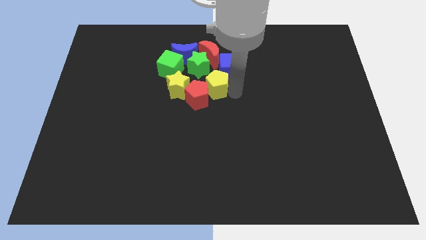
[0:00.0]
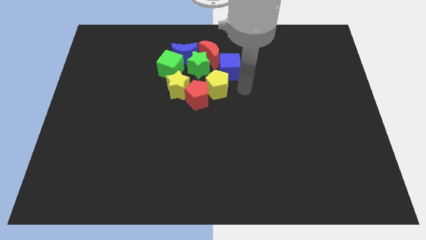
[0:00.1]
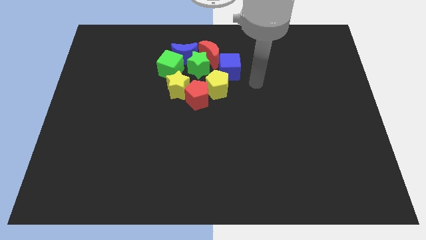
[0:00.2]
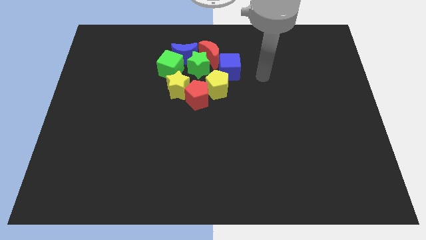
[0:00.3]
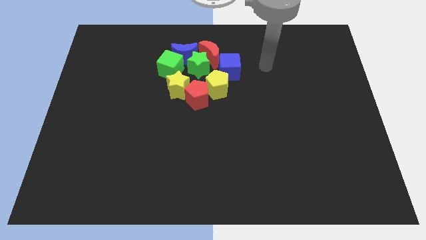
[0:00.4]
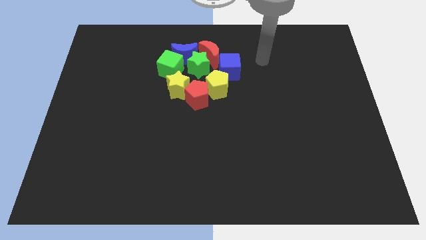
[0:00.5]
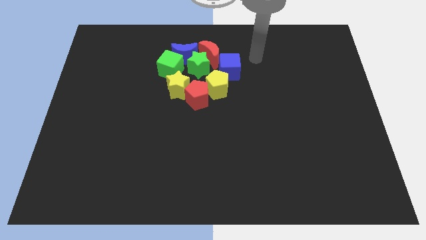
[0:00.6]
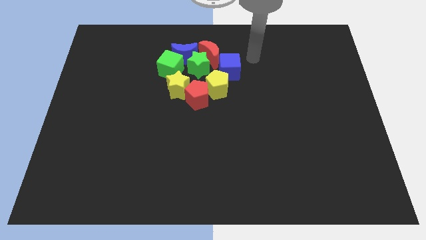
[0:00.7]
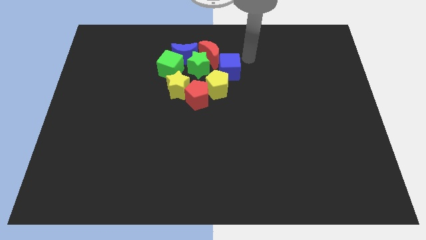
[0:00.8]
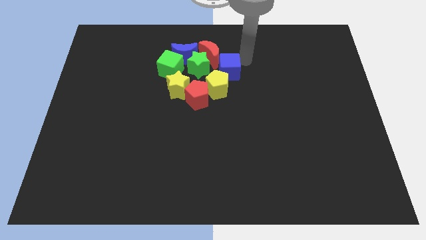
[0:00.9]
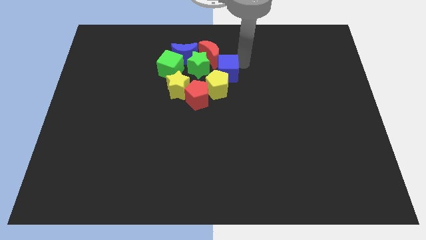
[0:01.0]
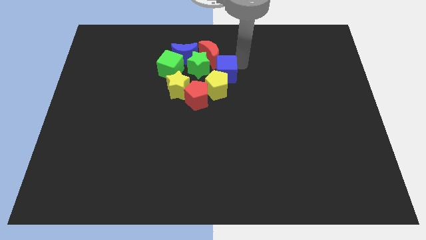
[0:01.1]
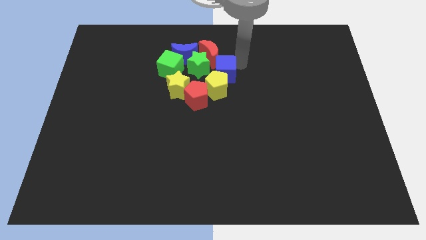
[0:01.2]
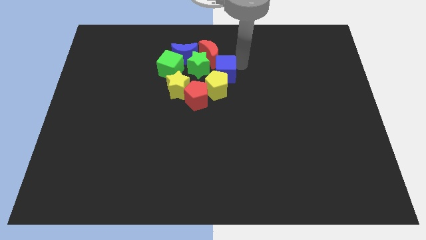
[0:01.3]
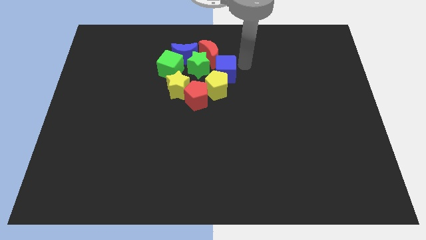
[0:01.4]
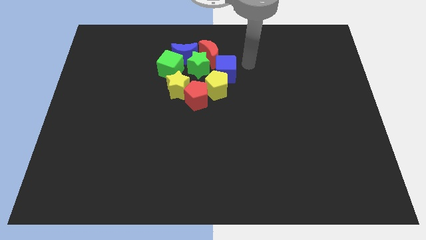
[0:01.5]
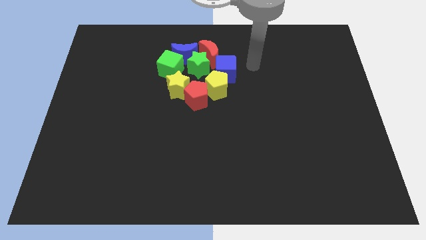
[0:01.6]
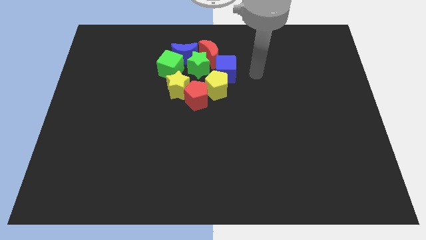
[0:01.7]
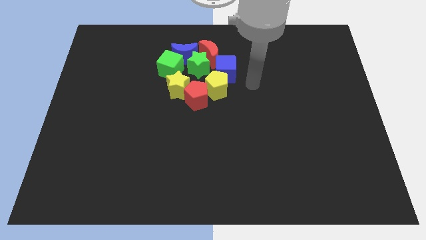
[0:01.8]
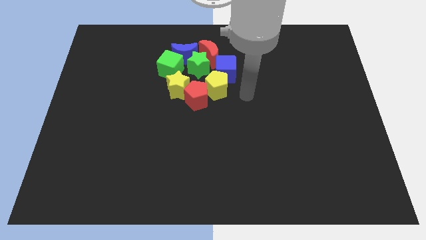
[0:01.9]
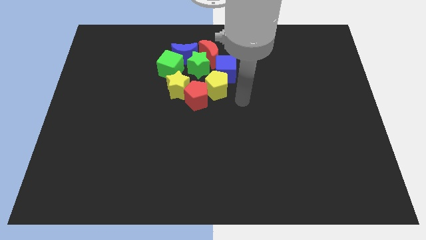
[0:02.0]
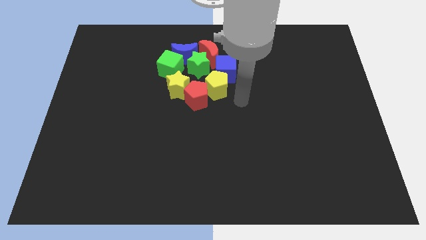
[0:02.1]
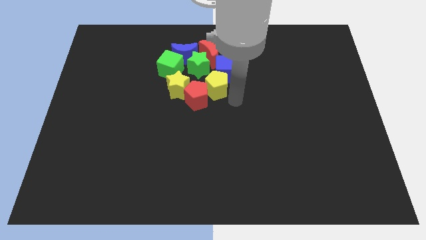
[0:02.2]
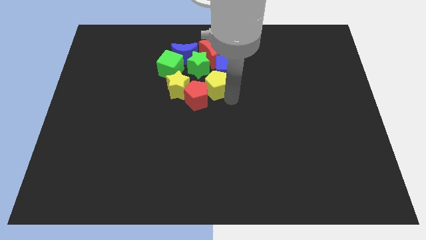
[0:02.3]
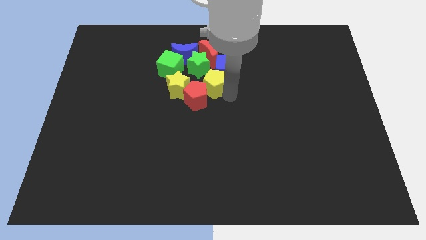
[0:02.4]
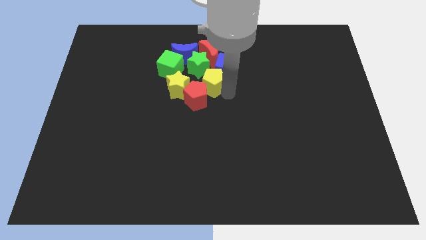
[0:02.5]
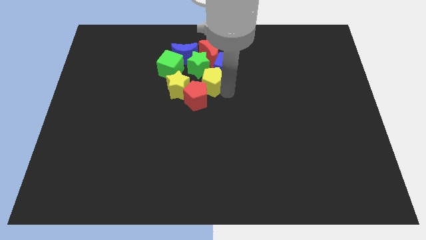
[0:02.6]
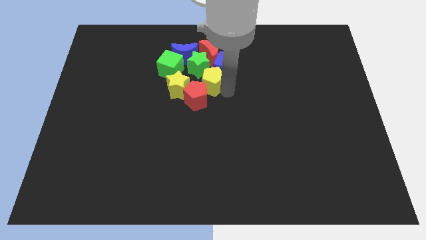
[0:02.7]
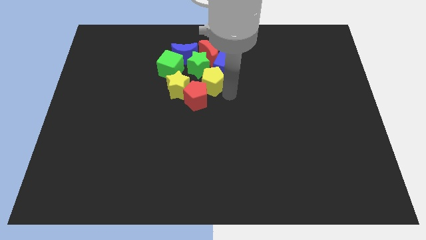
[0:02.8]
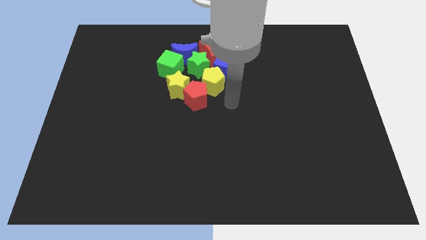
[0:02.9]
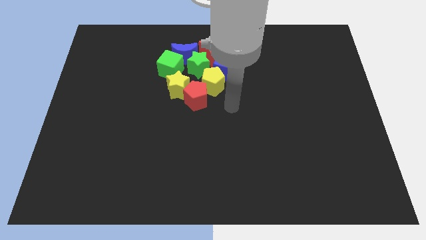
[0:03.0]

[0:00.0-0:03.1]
adjust the blue cube and yellow pentagon to form a group

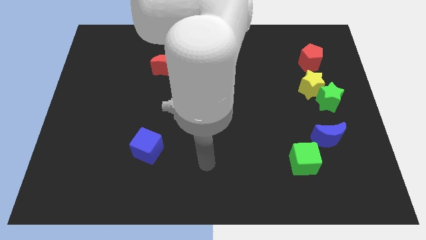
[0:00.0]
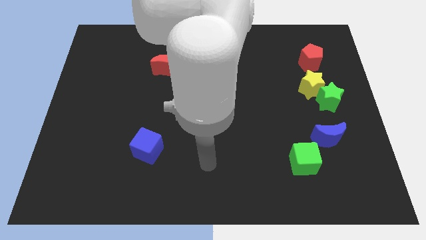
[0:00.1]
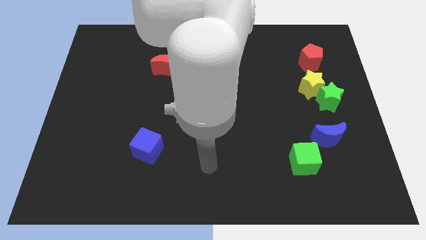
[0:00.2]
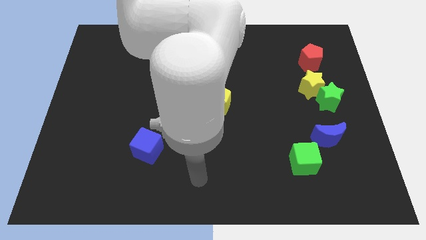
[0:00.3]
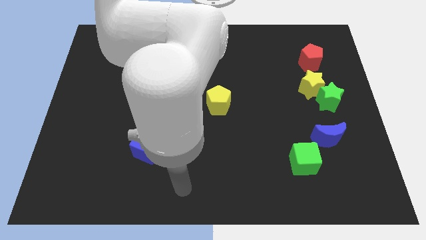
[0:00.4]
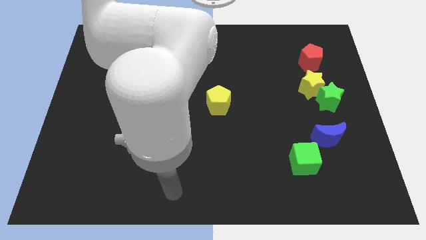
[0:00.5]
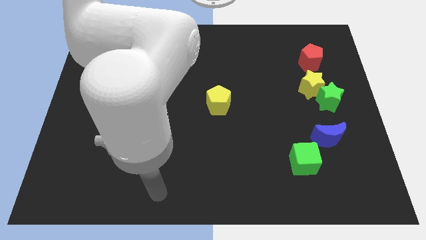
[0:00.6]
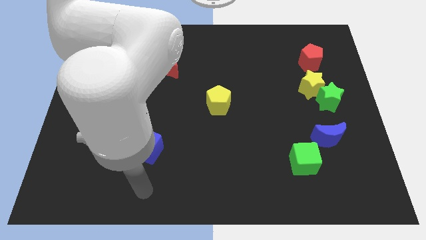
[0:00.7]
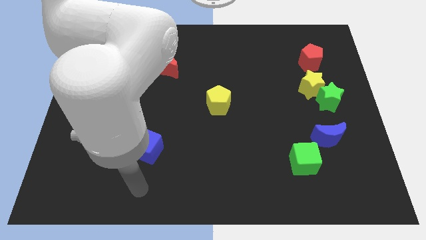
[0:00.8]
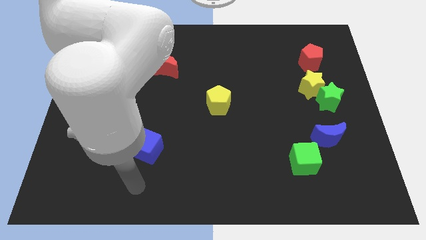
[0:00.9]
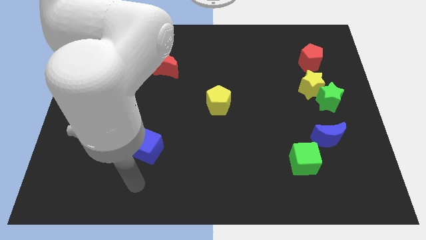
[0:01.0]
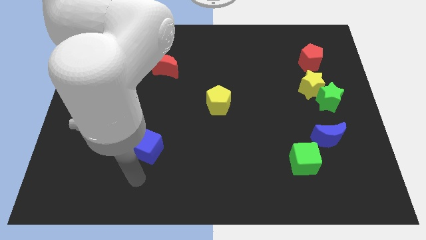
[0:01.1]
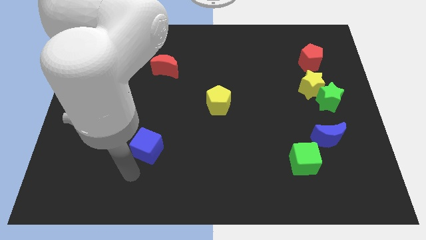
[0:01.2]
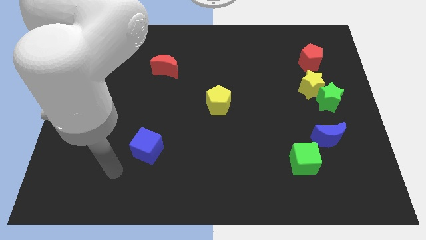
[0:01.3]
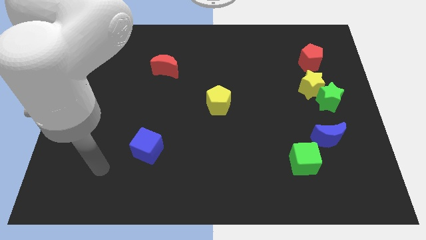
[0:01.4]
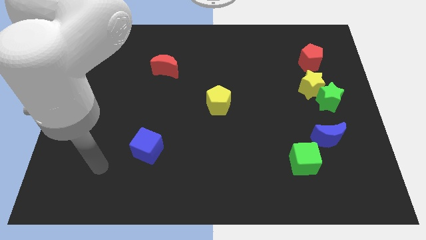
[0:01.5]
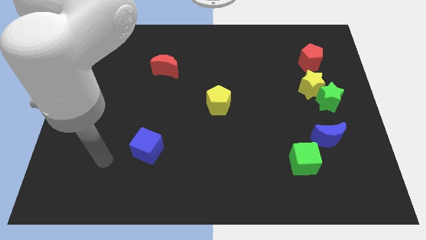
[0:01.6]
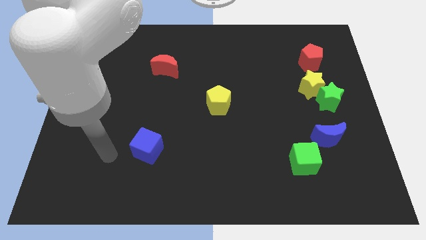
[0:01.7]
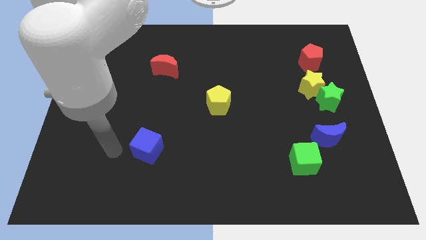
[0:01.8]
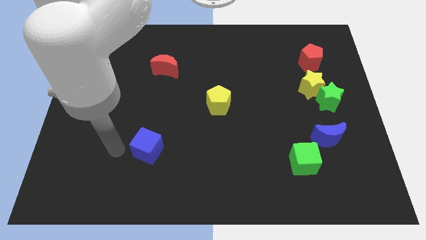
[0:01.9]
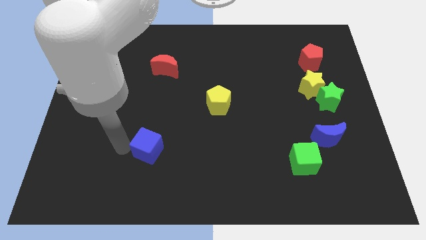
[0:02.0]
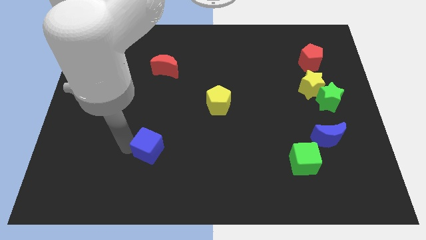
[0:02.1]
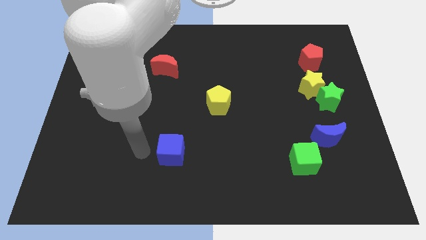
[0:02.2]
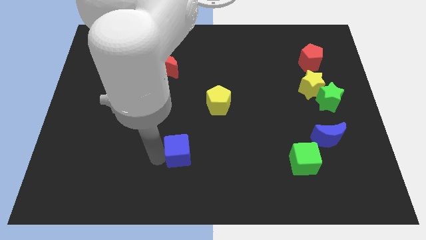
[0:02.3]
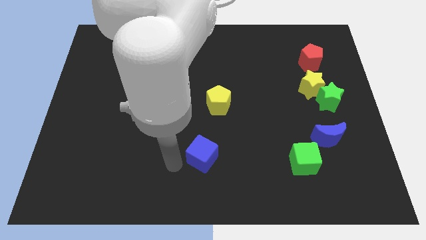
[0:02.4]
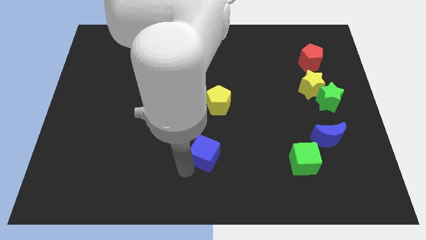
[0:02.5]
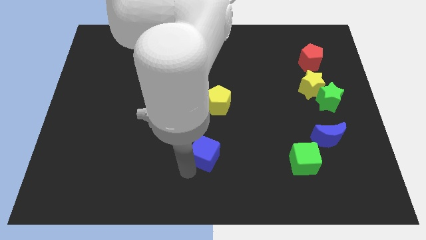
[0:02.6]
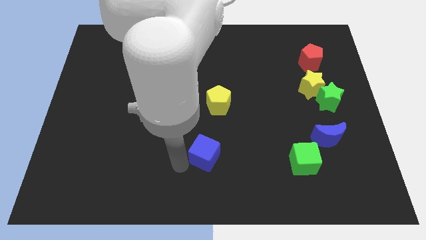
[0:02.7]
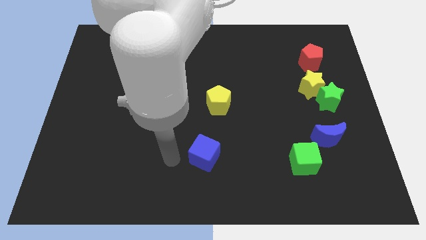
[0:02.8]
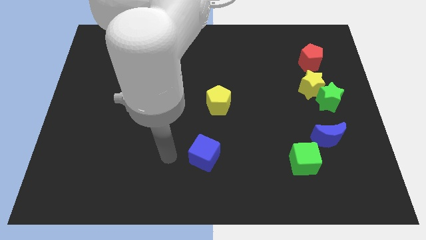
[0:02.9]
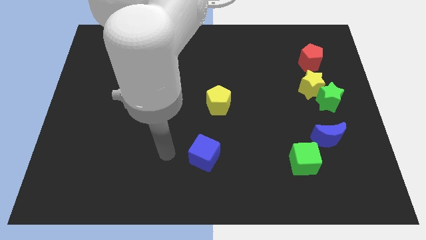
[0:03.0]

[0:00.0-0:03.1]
move the blue cube parallel to the left of the green cube

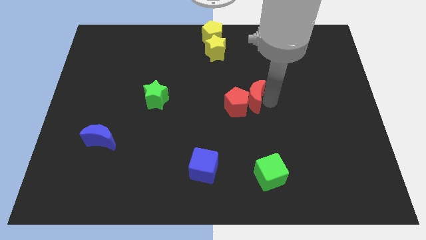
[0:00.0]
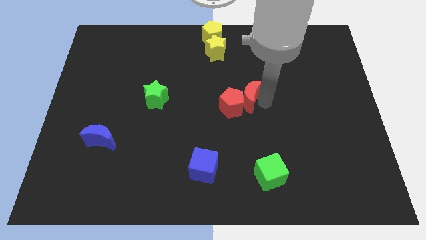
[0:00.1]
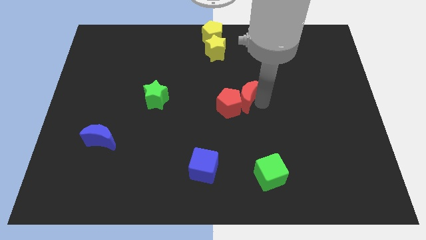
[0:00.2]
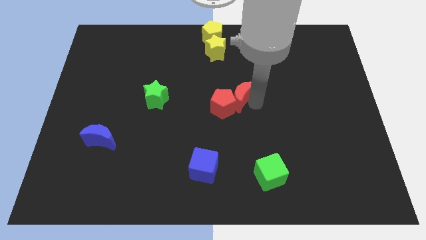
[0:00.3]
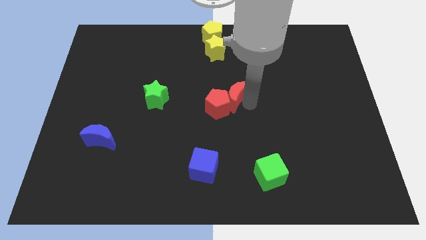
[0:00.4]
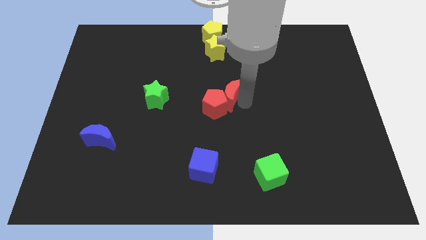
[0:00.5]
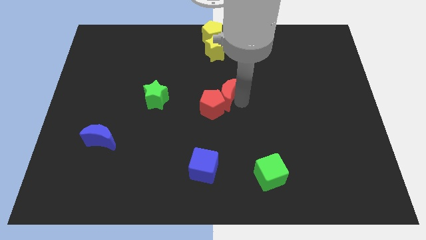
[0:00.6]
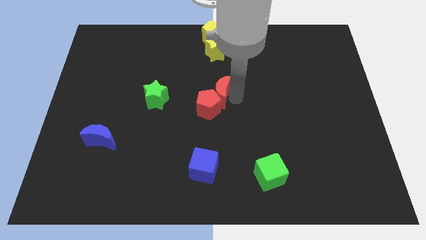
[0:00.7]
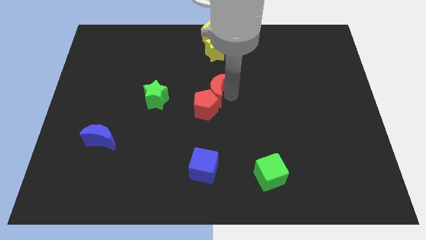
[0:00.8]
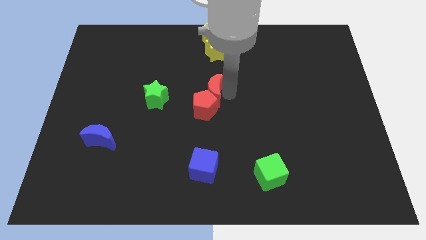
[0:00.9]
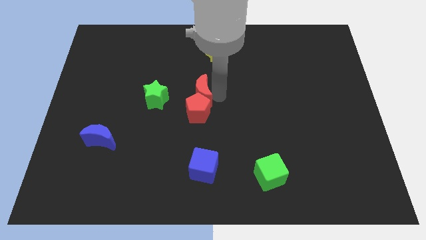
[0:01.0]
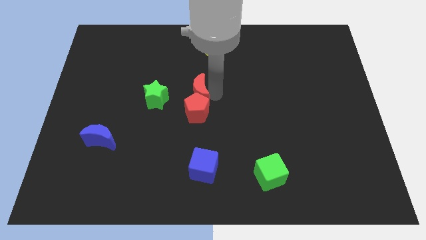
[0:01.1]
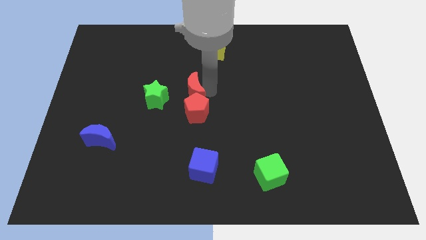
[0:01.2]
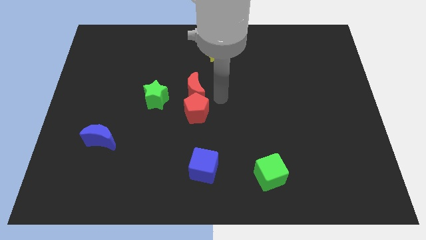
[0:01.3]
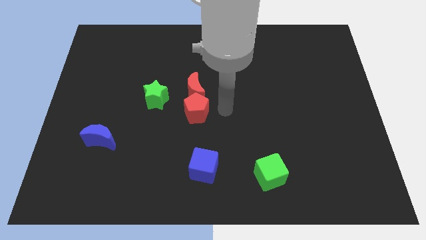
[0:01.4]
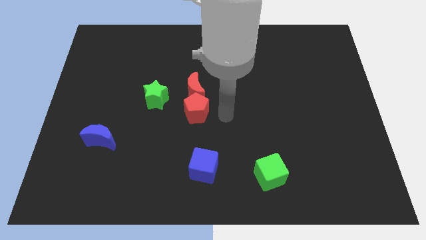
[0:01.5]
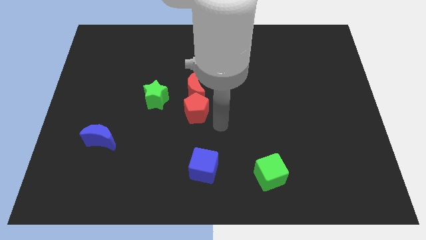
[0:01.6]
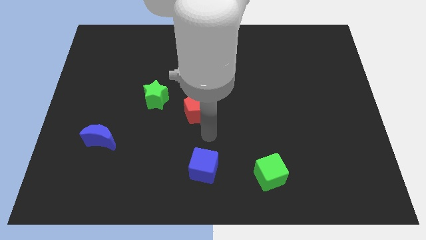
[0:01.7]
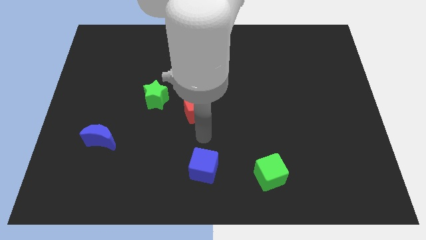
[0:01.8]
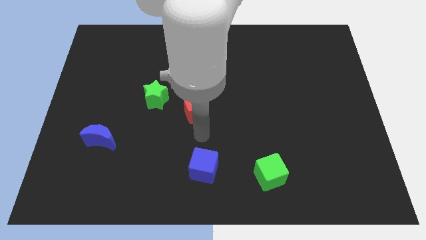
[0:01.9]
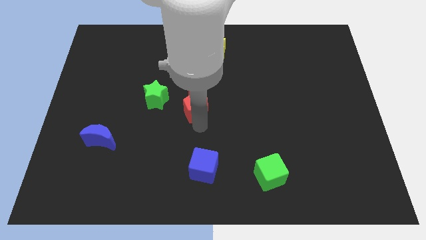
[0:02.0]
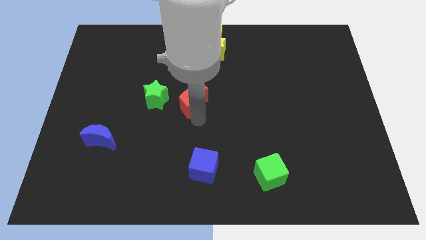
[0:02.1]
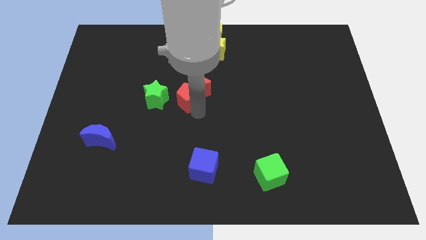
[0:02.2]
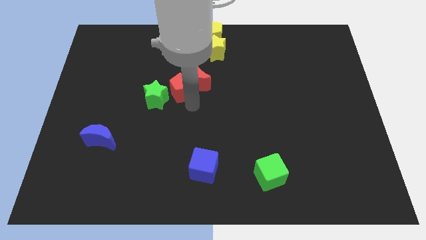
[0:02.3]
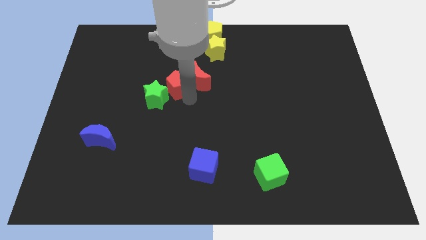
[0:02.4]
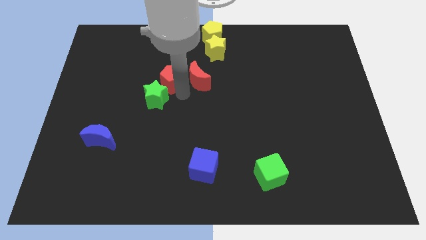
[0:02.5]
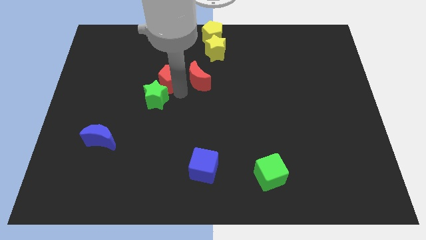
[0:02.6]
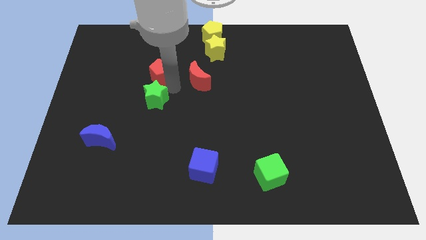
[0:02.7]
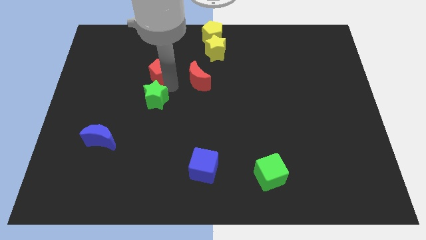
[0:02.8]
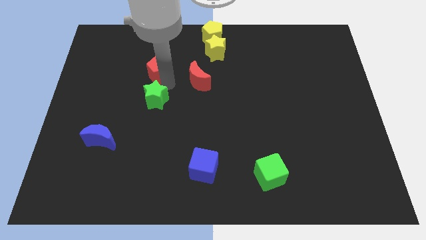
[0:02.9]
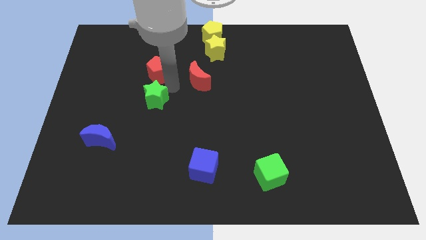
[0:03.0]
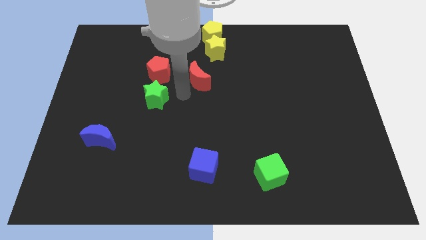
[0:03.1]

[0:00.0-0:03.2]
separate the group of red blocks
